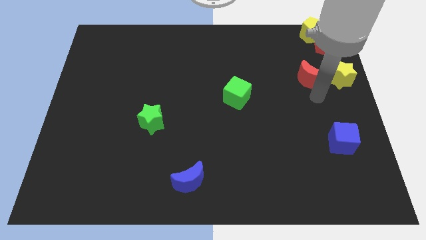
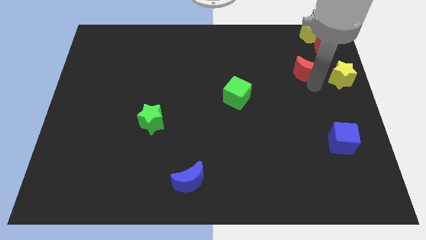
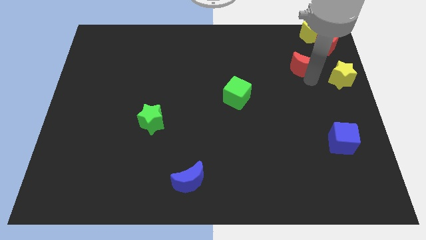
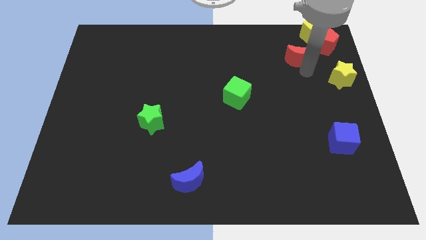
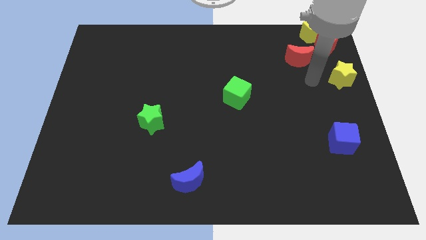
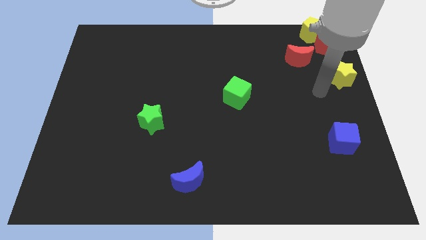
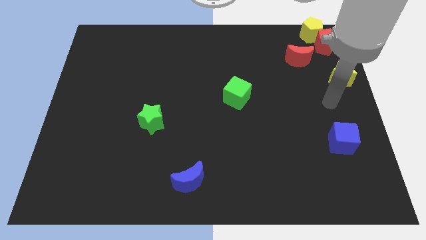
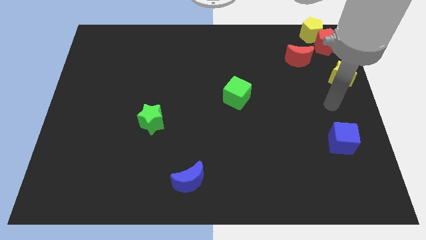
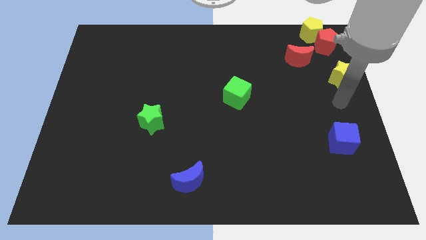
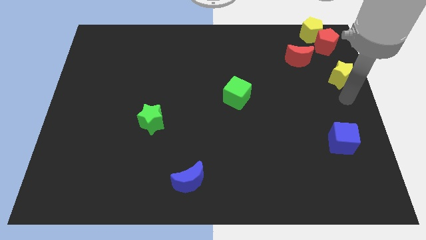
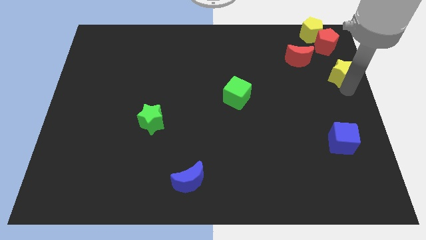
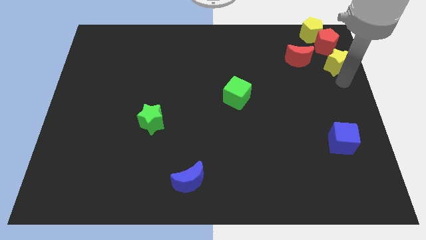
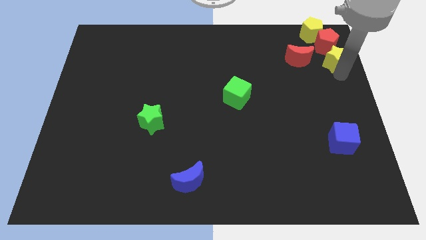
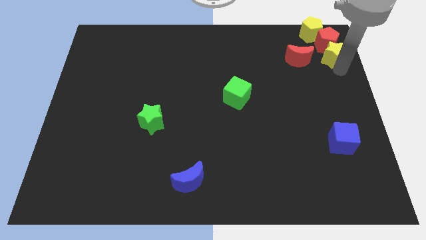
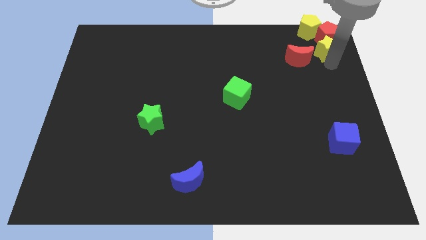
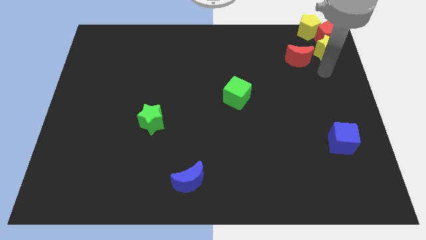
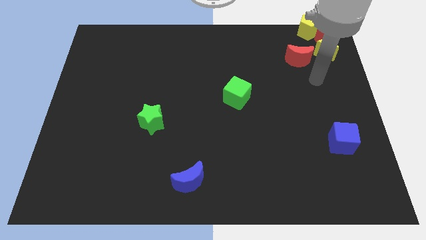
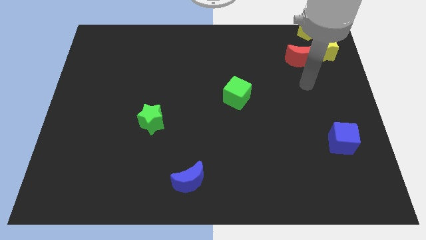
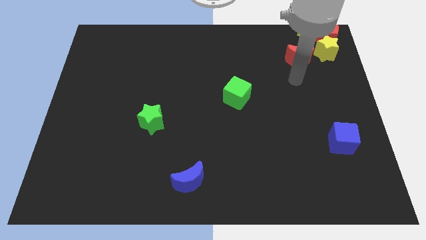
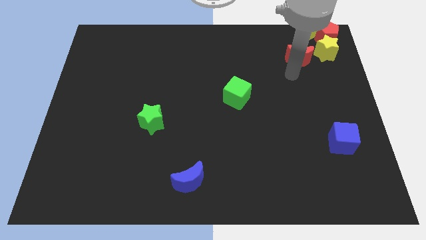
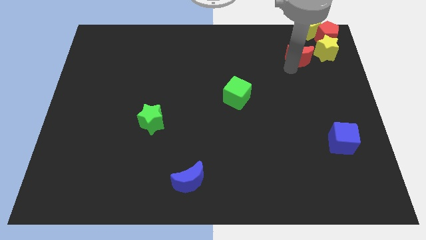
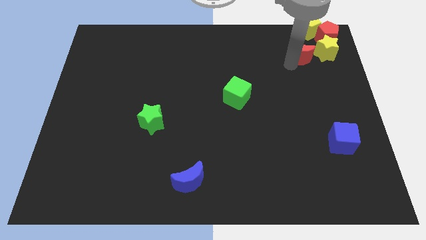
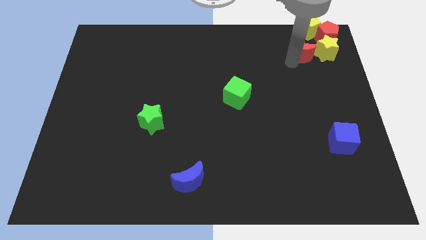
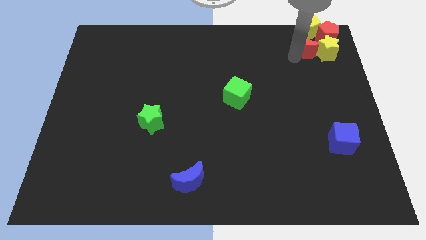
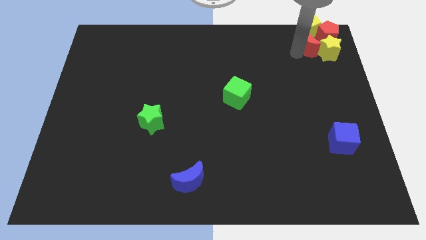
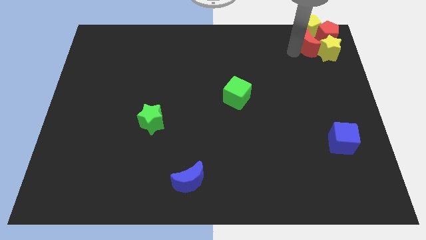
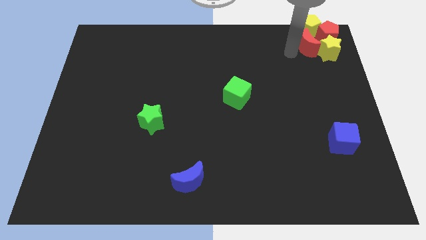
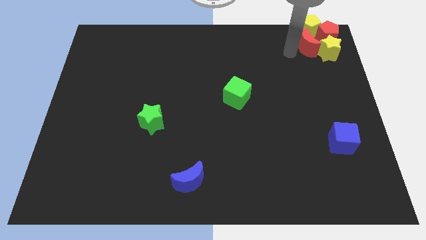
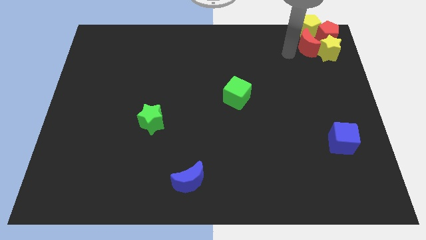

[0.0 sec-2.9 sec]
add the red crescent to the group of blocks to top left corner

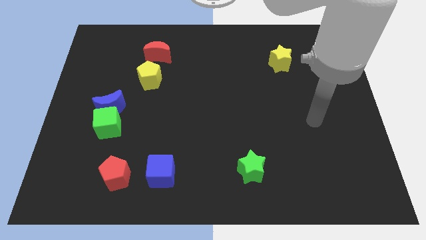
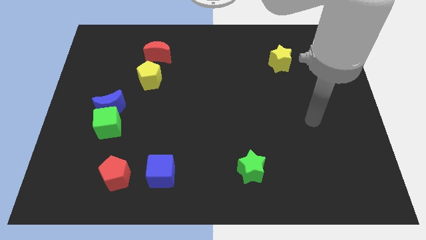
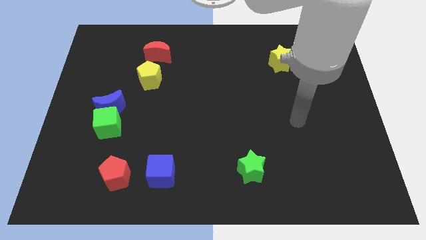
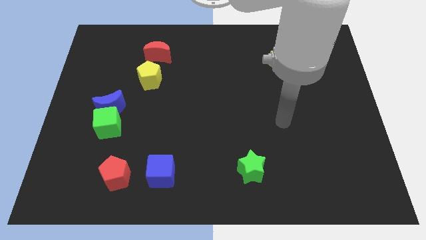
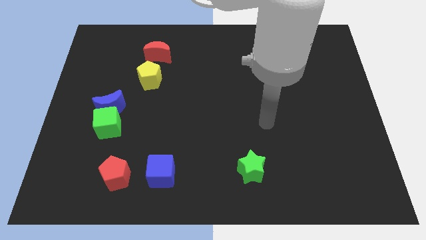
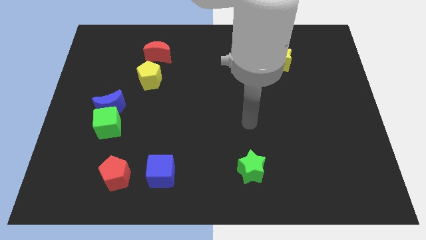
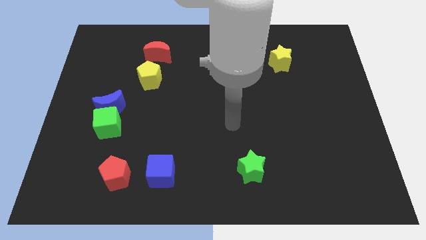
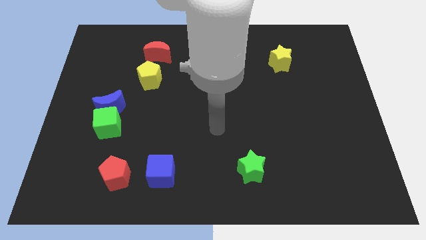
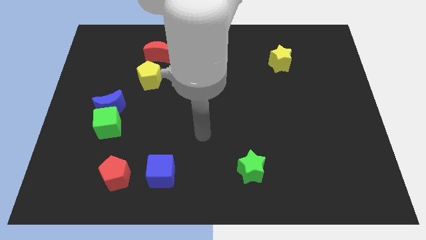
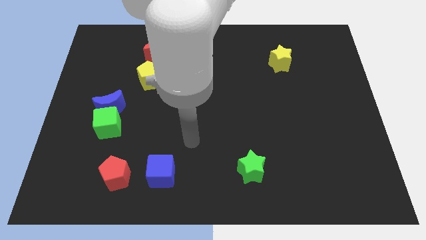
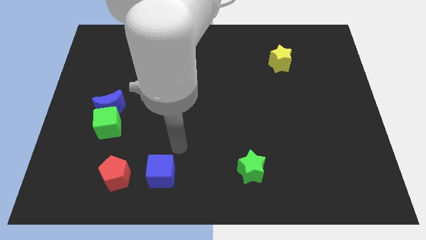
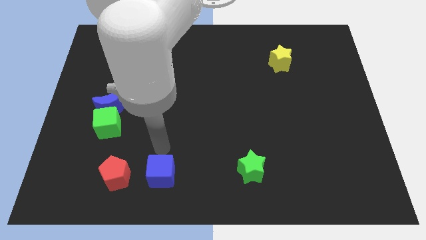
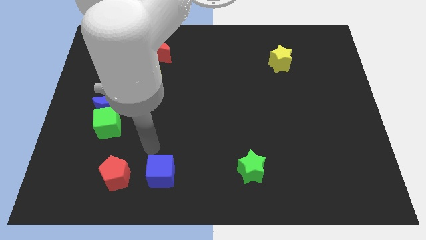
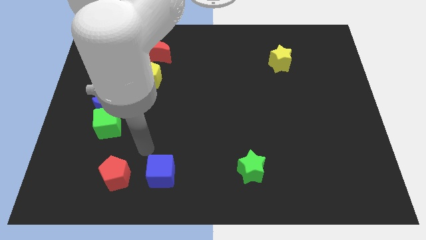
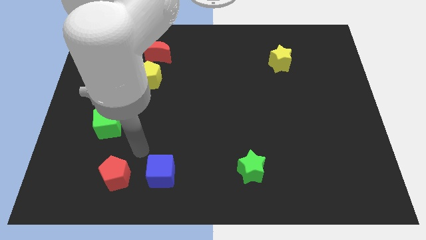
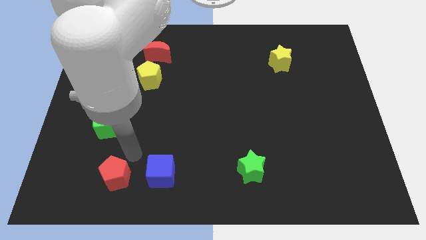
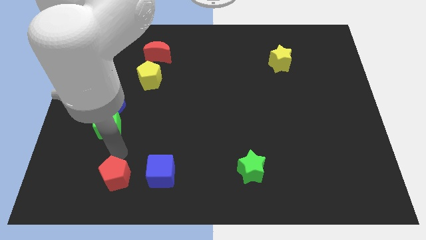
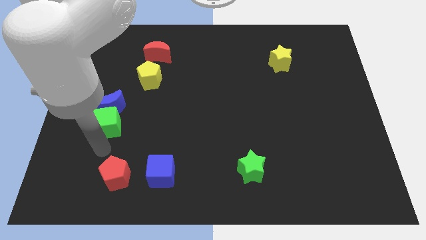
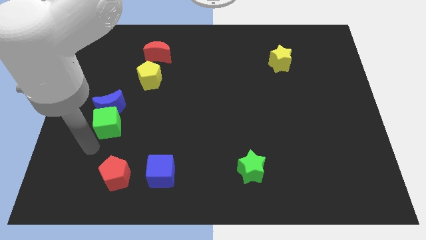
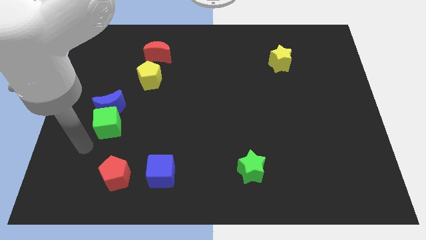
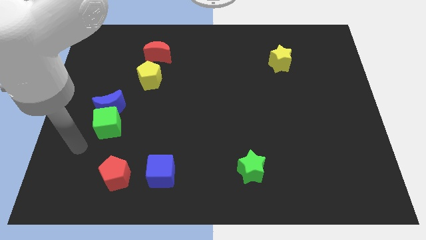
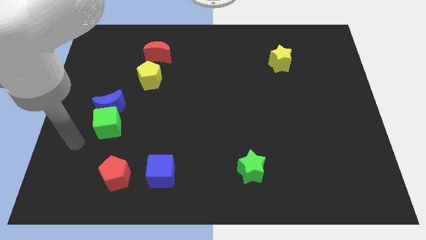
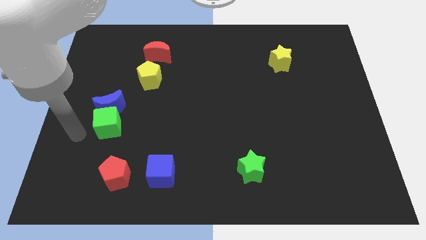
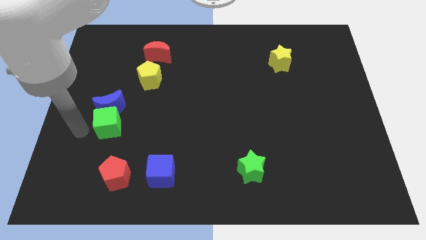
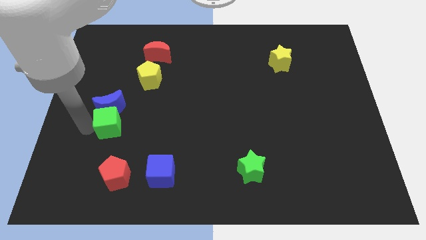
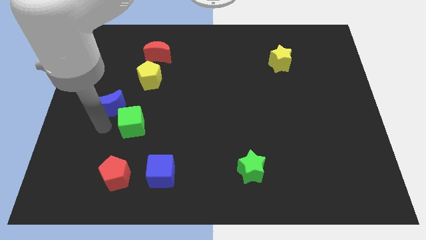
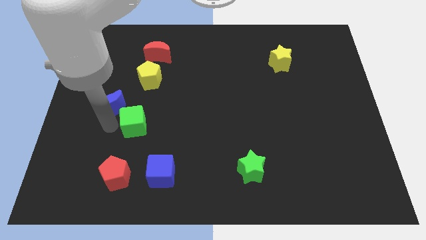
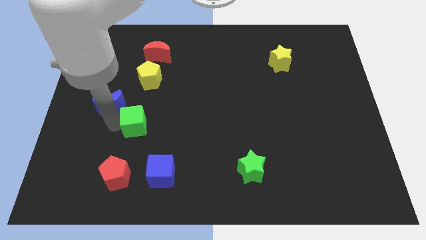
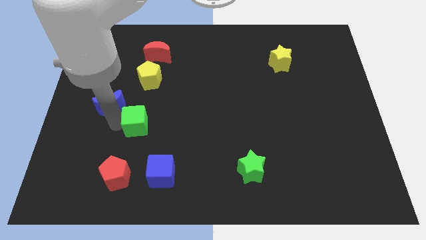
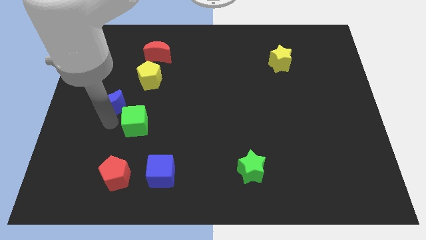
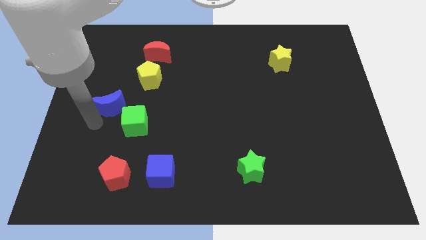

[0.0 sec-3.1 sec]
slide green cube above the red pentagon

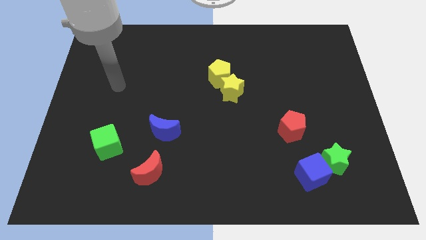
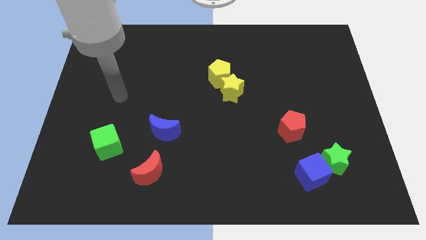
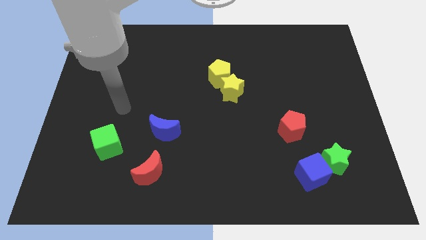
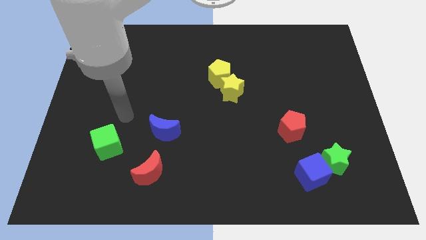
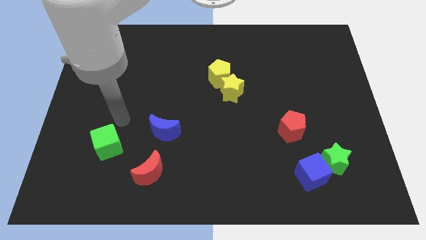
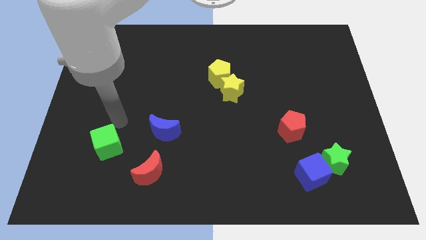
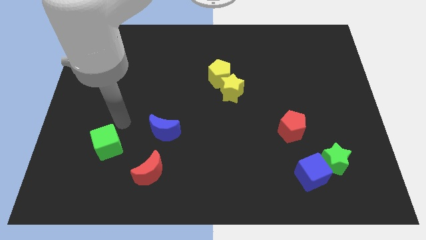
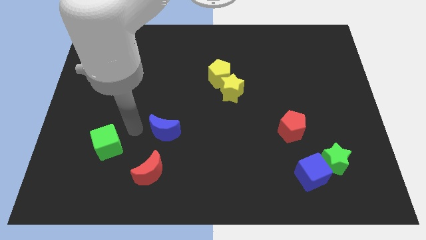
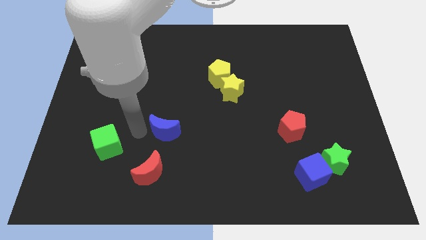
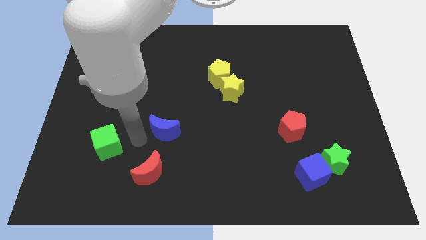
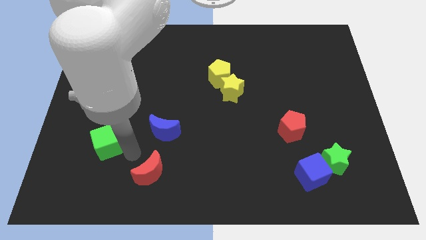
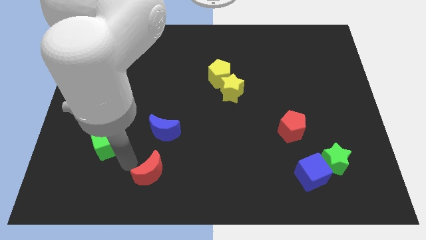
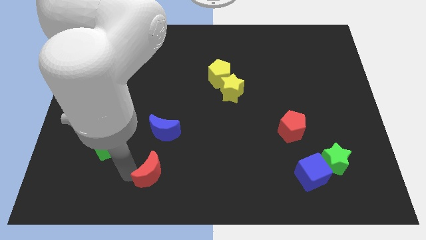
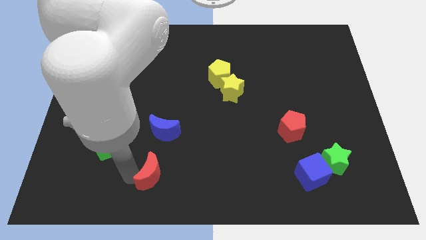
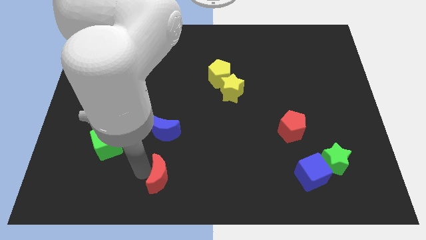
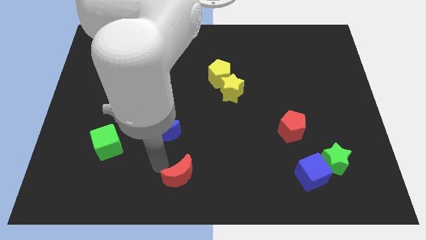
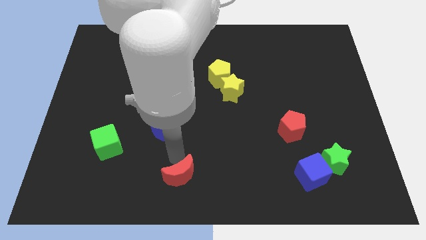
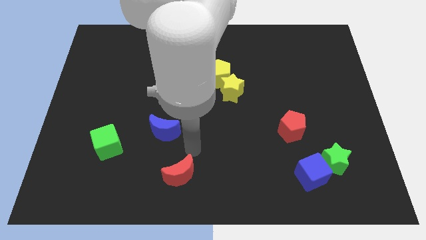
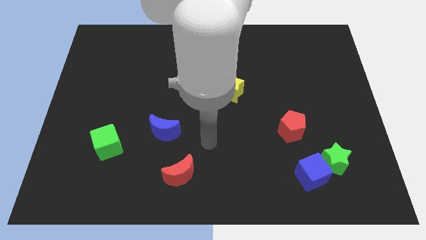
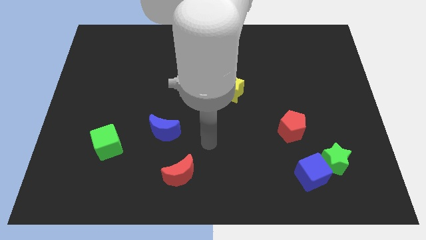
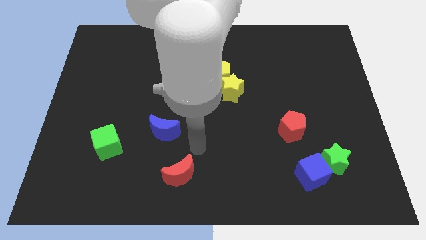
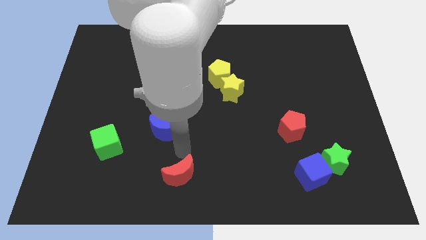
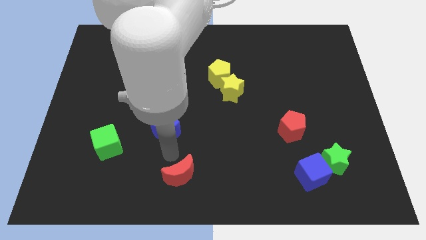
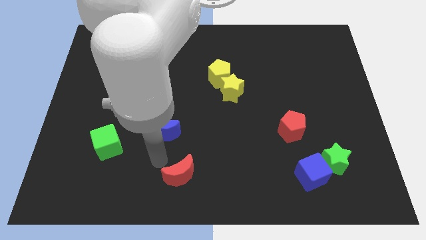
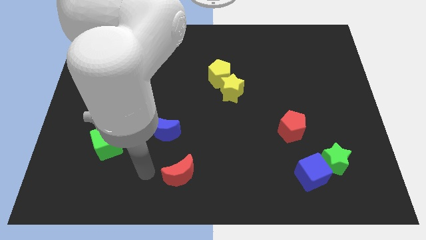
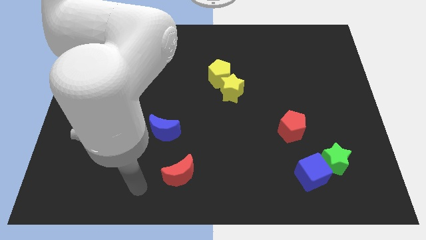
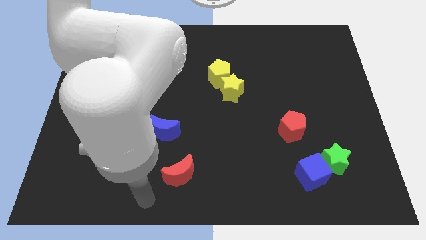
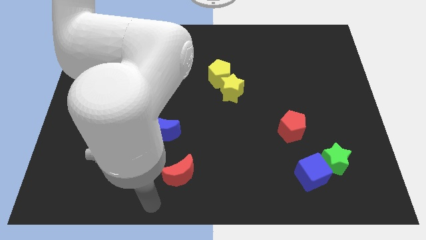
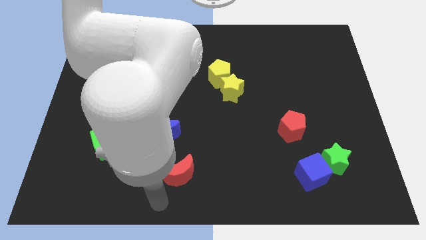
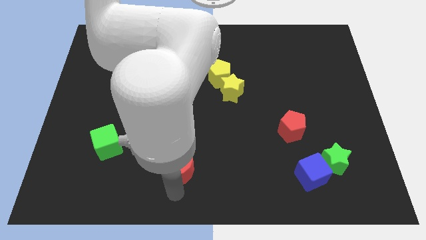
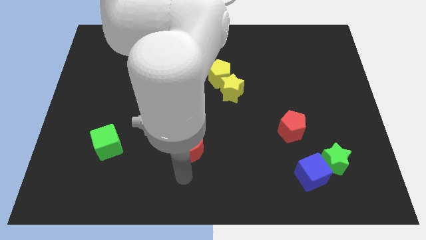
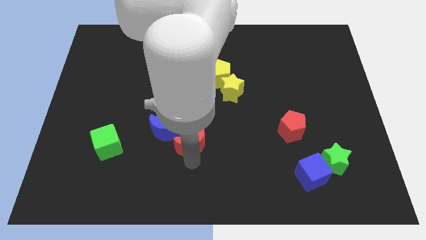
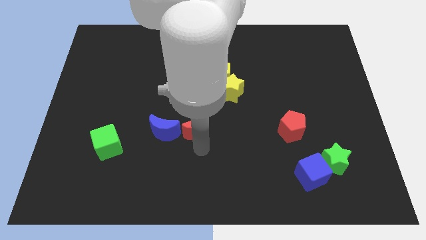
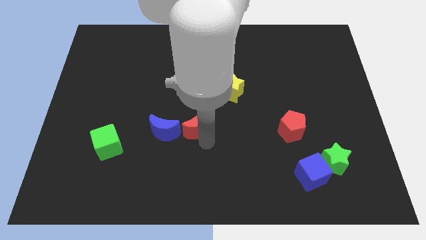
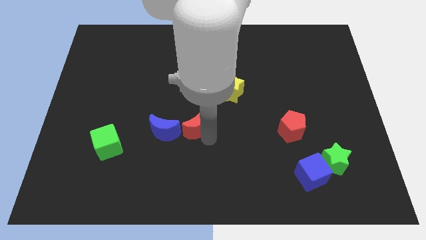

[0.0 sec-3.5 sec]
move the red moon right to the blue moon
